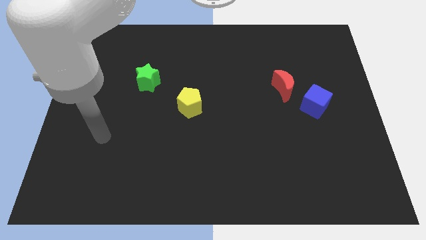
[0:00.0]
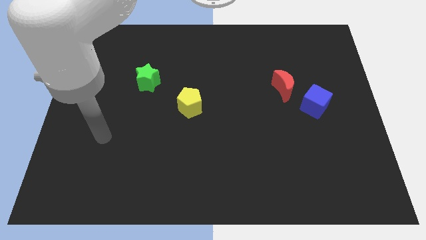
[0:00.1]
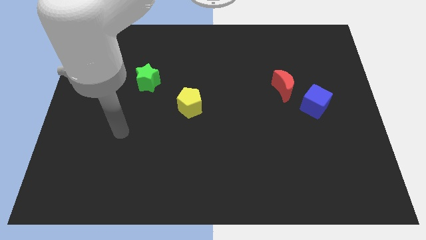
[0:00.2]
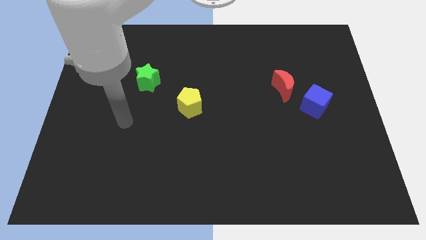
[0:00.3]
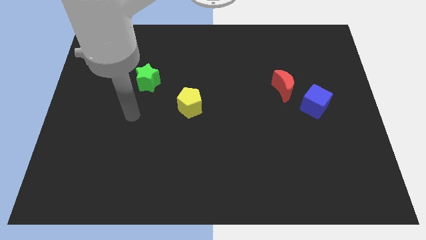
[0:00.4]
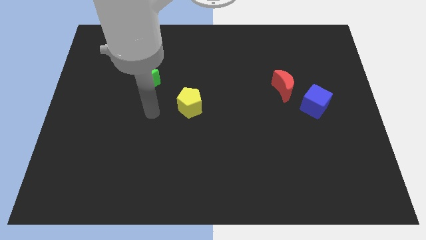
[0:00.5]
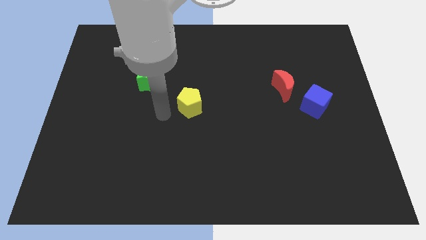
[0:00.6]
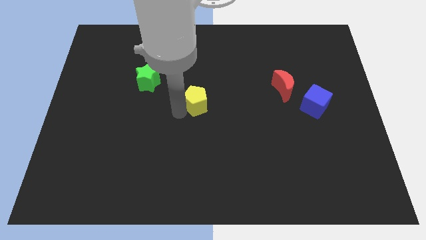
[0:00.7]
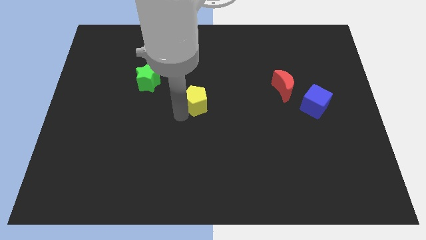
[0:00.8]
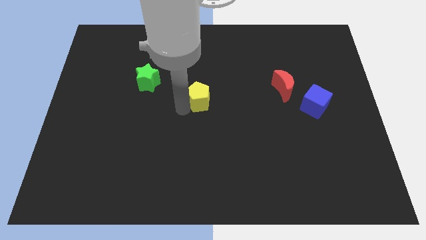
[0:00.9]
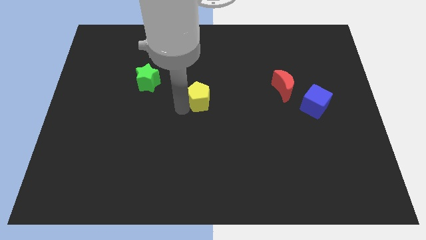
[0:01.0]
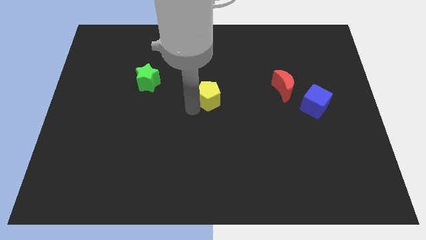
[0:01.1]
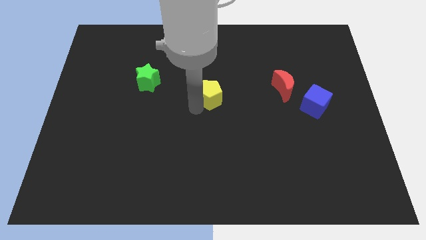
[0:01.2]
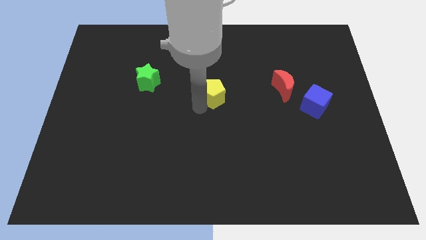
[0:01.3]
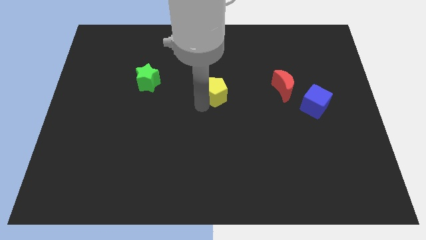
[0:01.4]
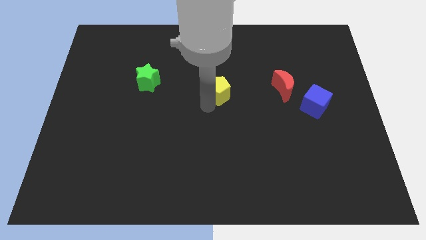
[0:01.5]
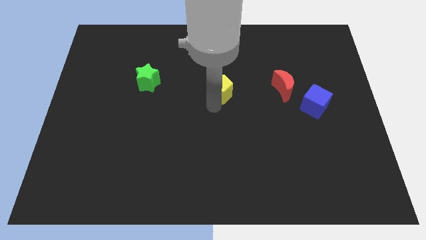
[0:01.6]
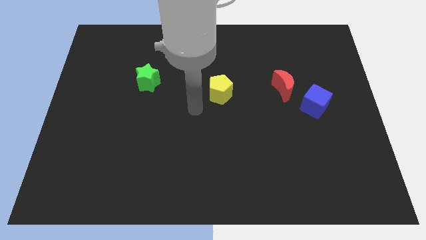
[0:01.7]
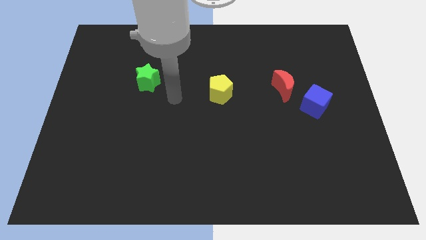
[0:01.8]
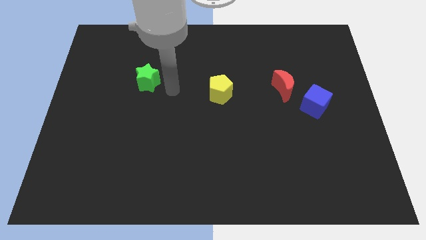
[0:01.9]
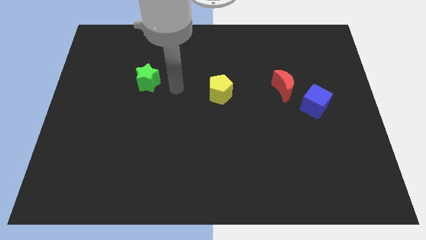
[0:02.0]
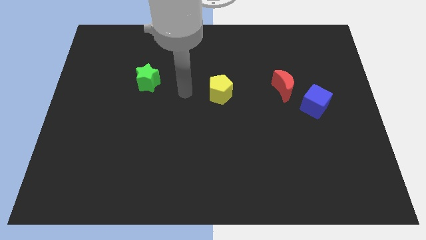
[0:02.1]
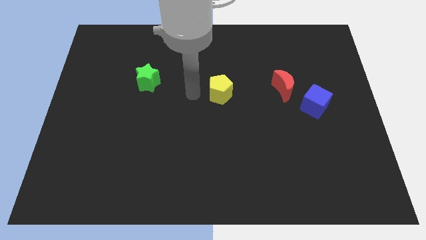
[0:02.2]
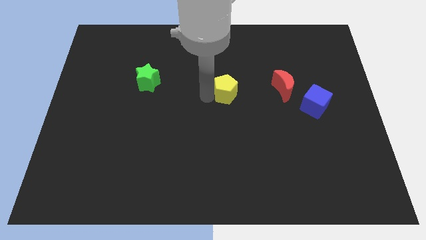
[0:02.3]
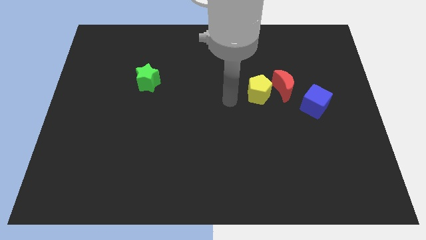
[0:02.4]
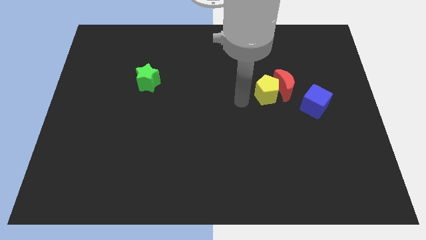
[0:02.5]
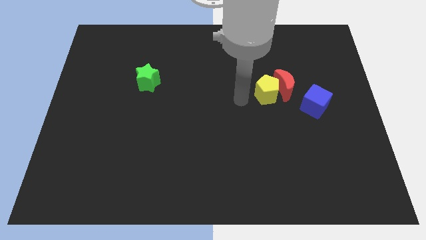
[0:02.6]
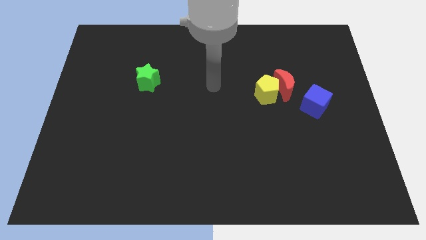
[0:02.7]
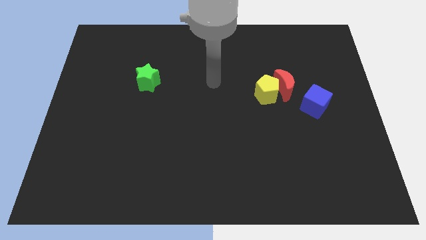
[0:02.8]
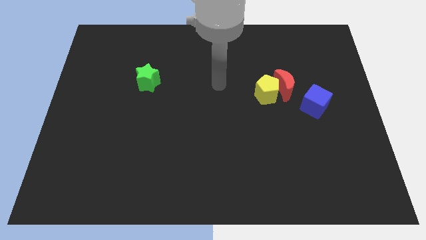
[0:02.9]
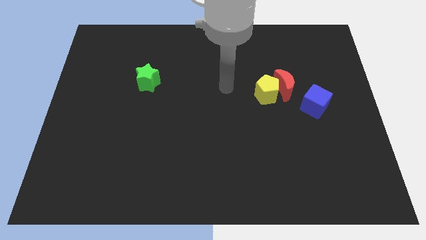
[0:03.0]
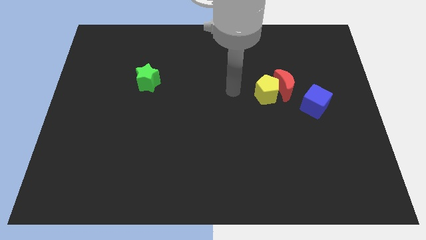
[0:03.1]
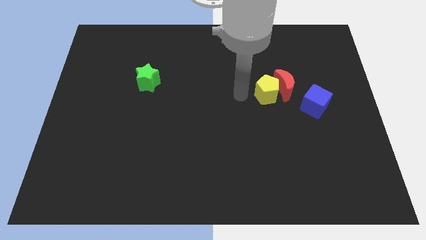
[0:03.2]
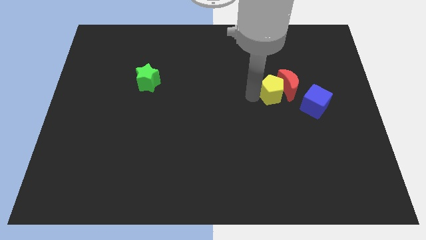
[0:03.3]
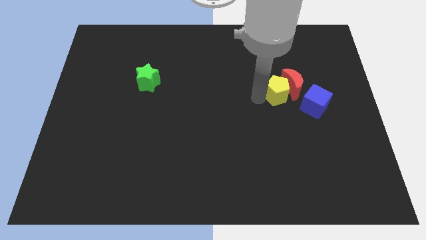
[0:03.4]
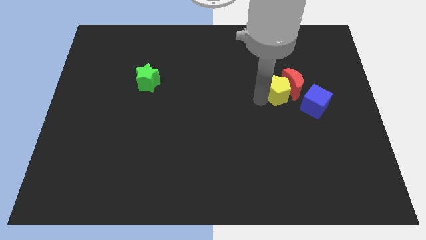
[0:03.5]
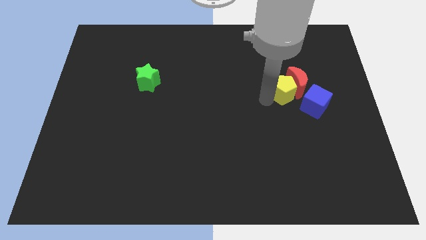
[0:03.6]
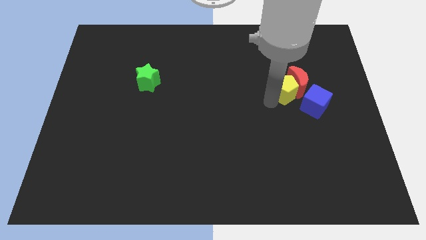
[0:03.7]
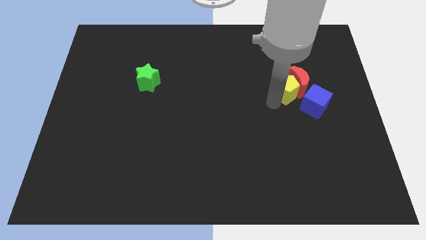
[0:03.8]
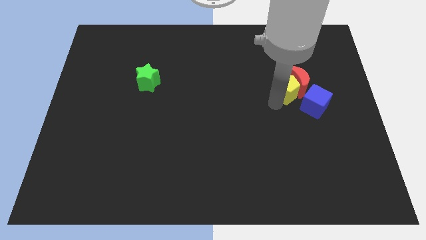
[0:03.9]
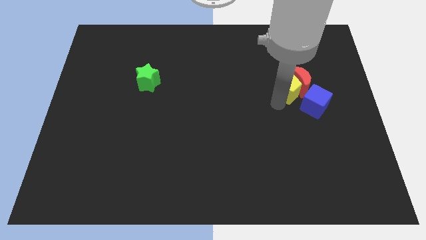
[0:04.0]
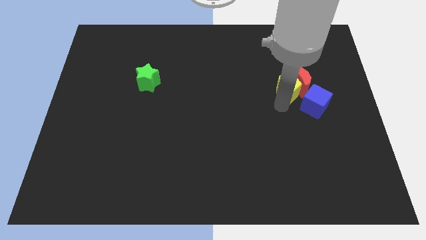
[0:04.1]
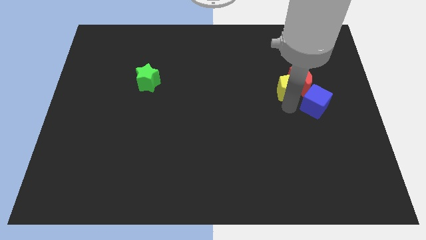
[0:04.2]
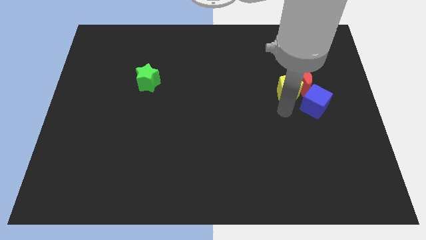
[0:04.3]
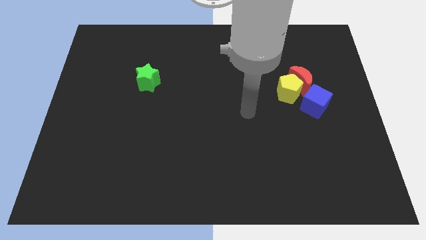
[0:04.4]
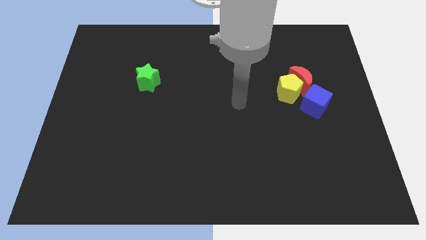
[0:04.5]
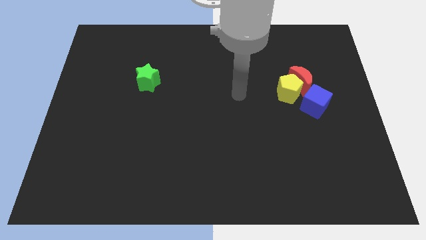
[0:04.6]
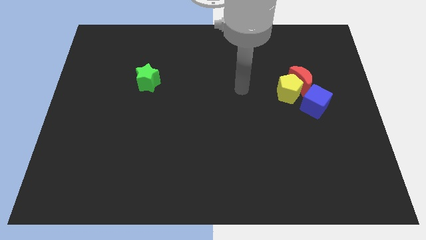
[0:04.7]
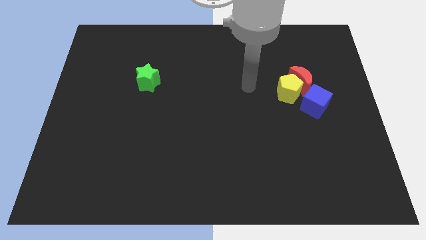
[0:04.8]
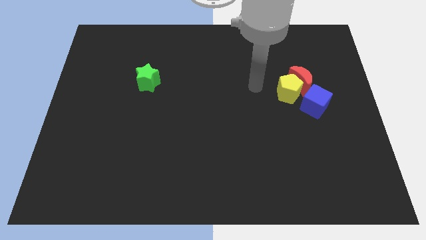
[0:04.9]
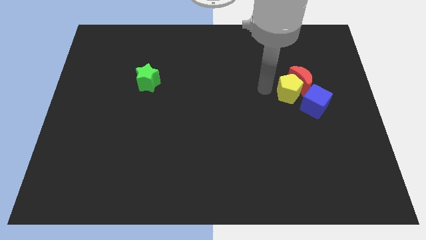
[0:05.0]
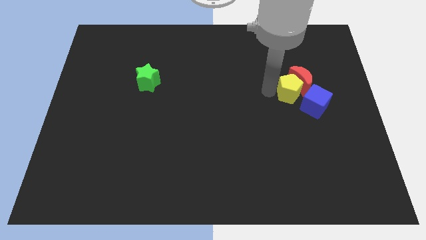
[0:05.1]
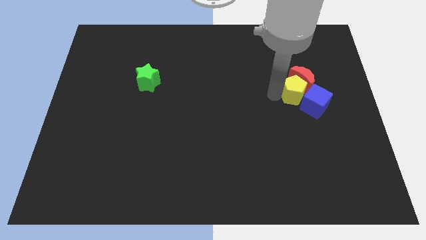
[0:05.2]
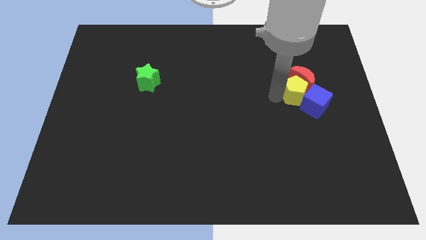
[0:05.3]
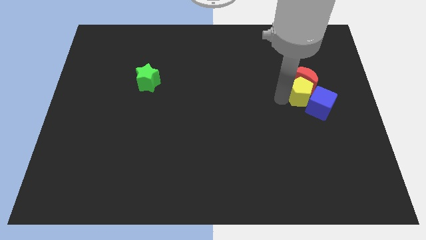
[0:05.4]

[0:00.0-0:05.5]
move the yellow pentagon to the blue cube

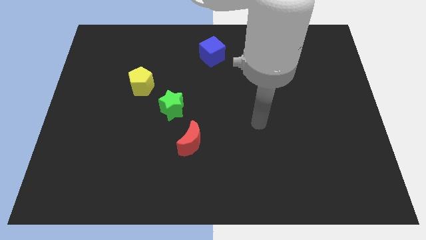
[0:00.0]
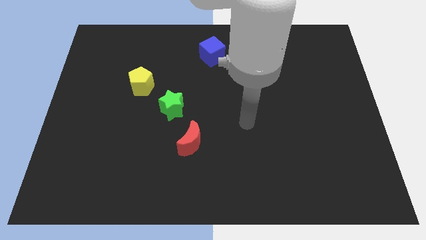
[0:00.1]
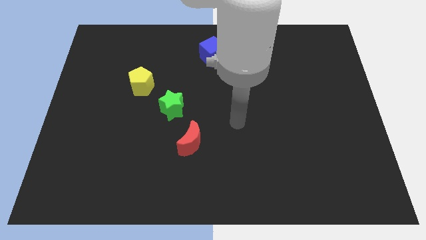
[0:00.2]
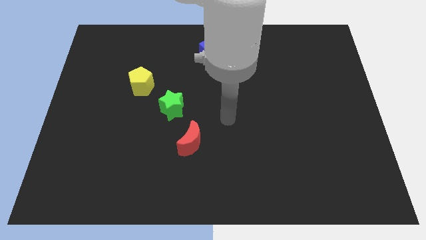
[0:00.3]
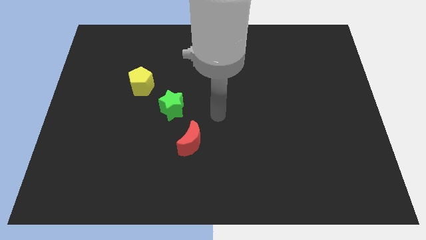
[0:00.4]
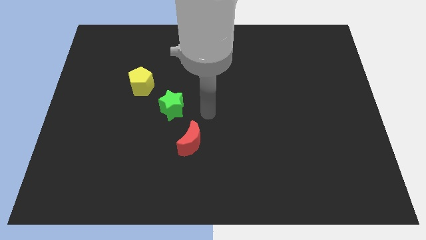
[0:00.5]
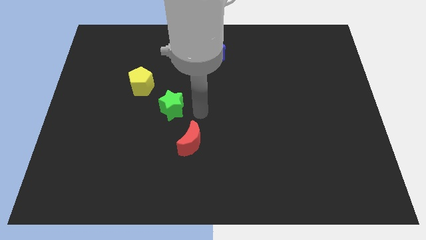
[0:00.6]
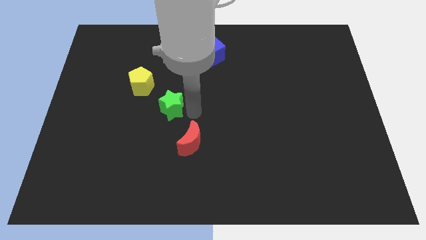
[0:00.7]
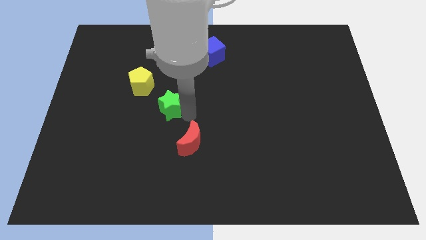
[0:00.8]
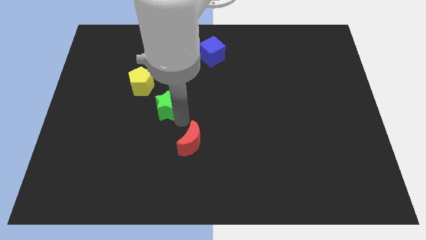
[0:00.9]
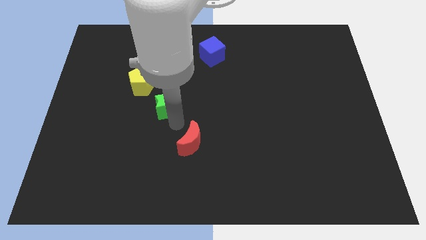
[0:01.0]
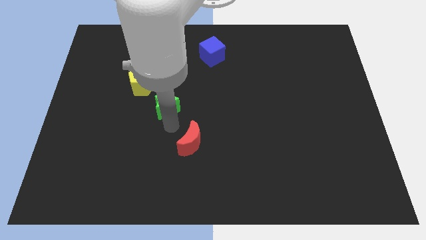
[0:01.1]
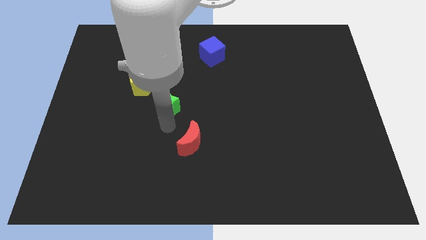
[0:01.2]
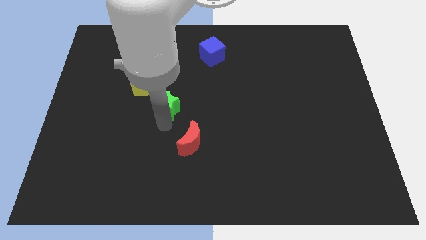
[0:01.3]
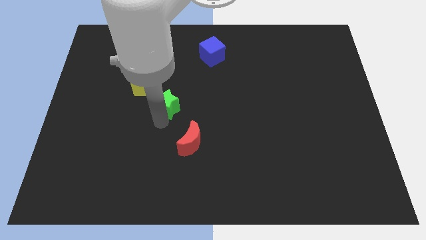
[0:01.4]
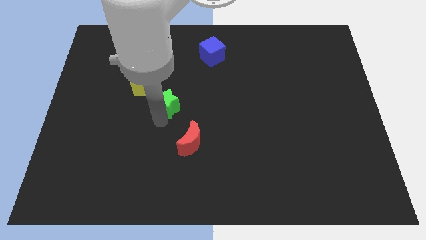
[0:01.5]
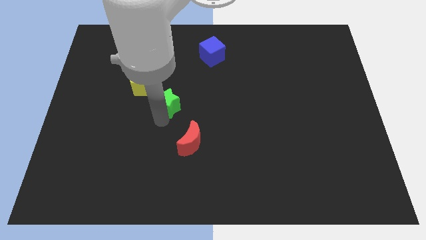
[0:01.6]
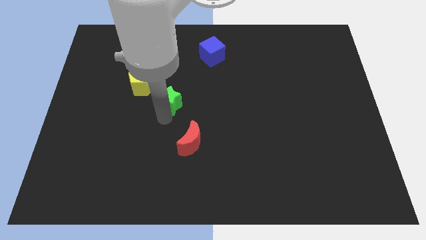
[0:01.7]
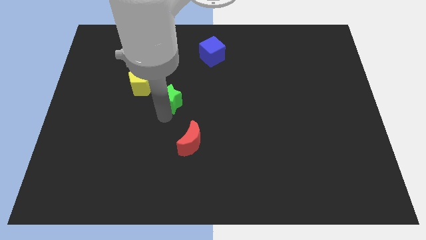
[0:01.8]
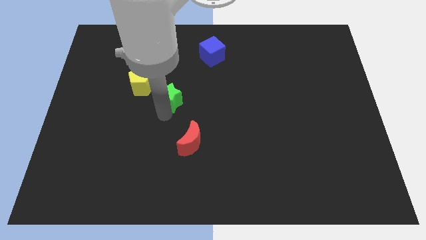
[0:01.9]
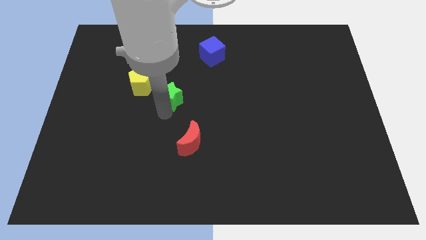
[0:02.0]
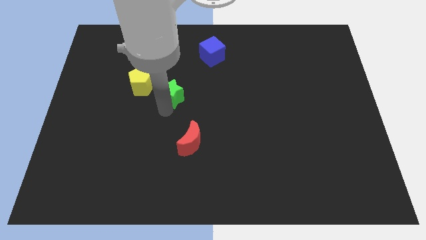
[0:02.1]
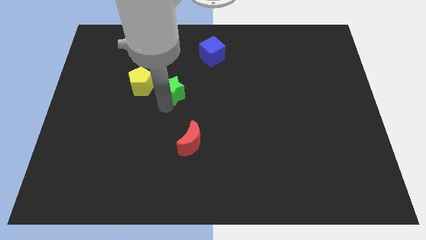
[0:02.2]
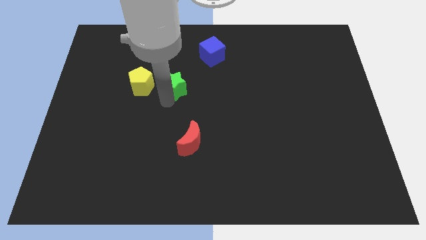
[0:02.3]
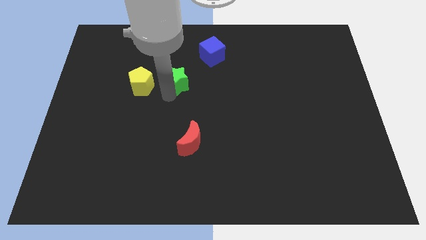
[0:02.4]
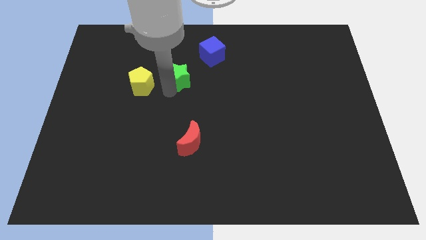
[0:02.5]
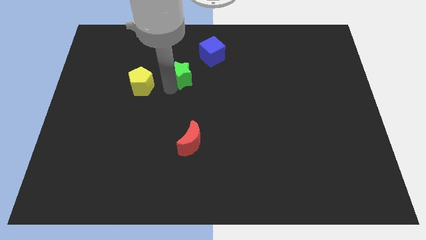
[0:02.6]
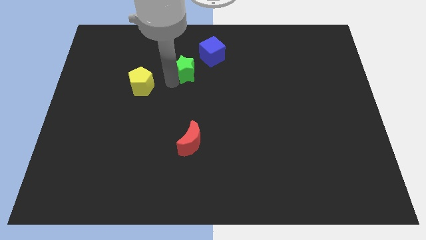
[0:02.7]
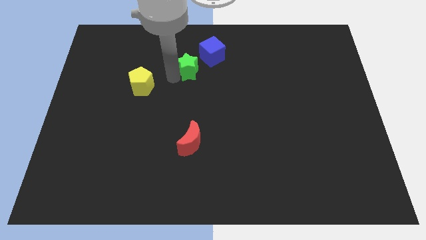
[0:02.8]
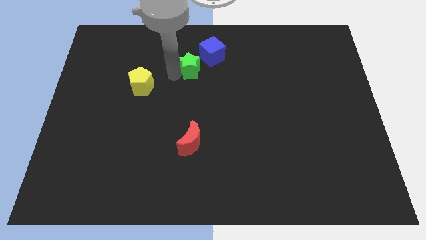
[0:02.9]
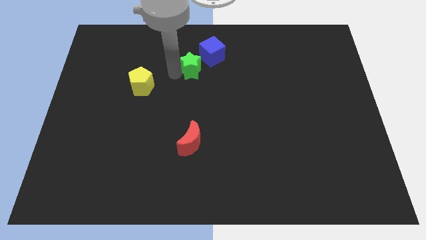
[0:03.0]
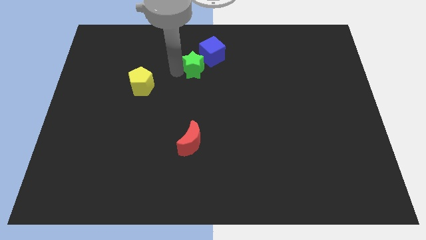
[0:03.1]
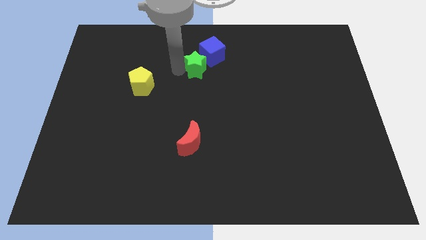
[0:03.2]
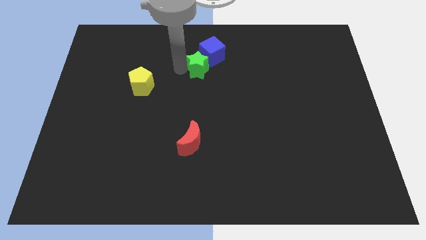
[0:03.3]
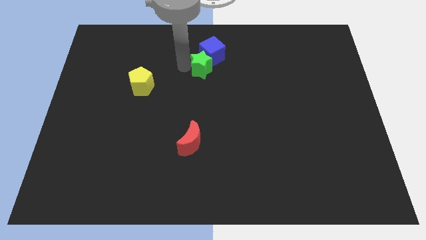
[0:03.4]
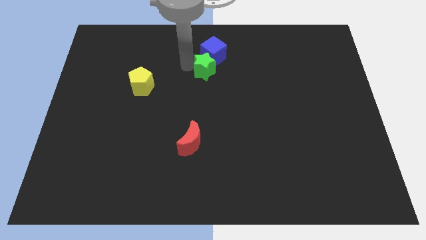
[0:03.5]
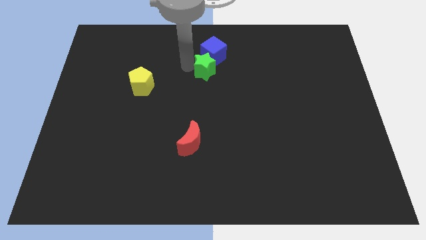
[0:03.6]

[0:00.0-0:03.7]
put the green block next to the blue cube
